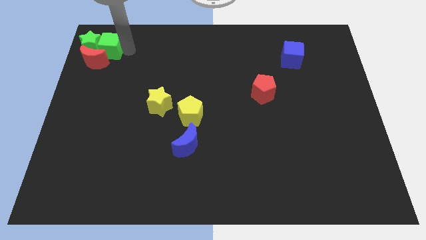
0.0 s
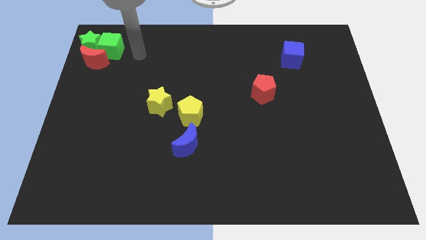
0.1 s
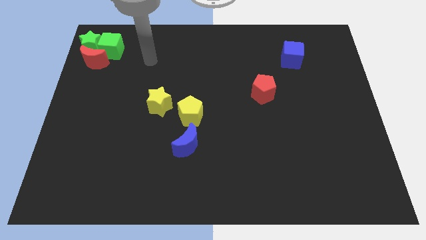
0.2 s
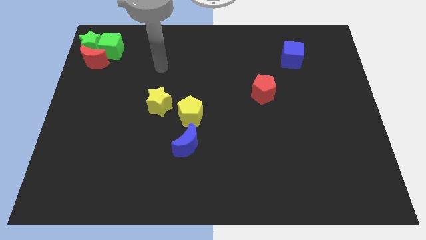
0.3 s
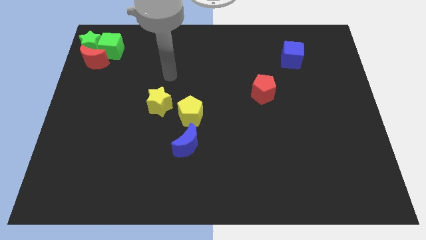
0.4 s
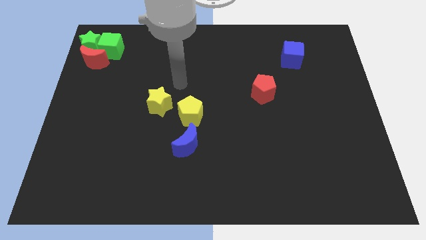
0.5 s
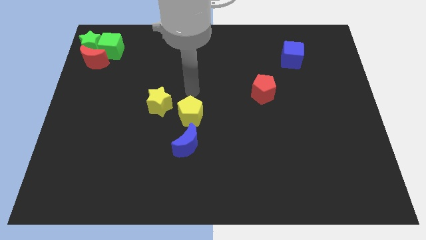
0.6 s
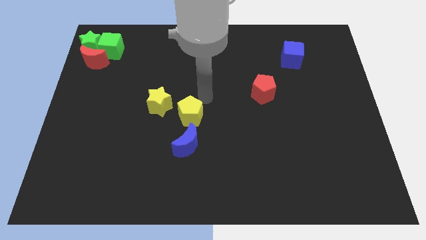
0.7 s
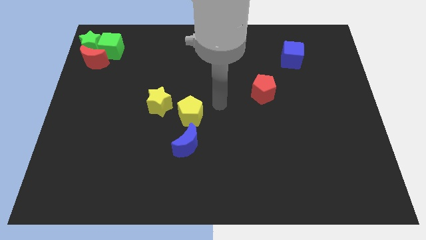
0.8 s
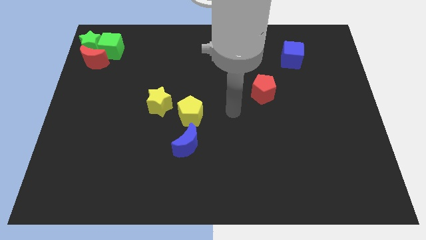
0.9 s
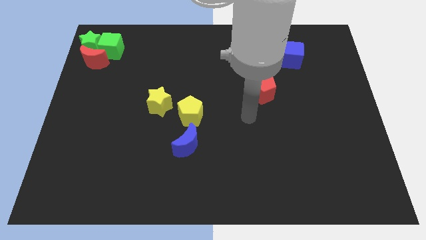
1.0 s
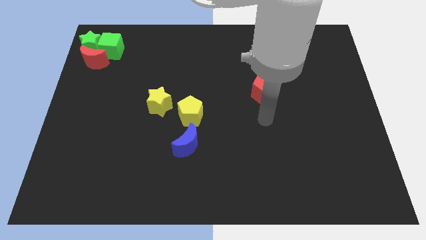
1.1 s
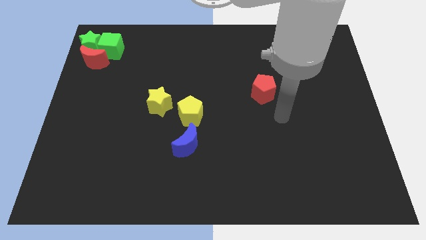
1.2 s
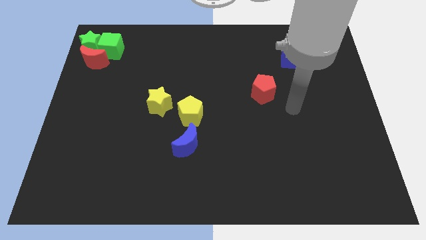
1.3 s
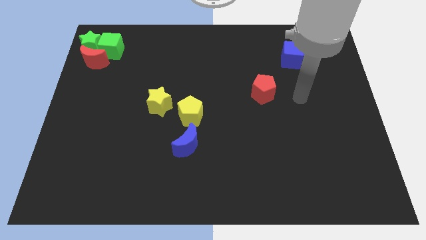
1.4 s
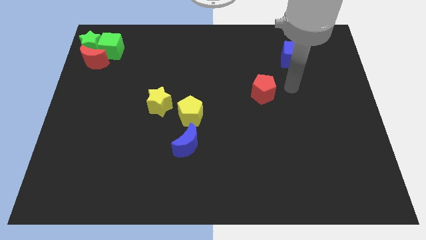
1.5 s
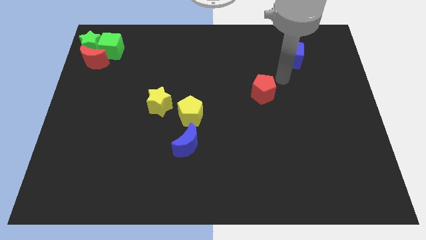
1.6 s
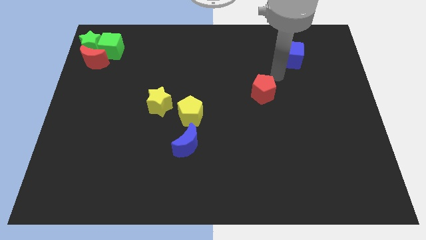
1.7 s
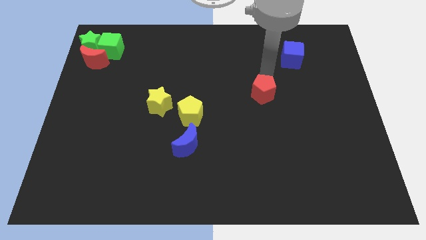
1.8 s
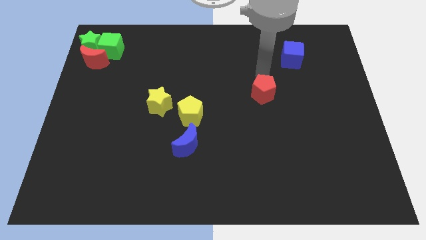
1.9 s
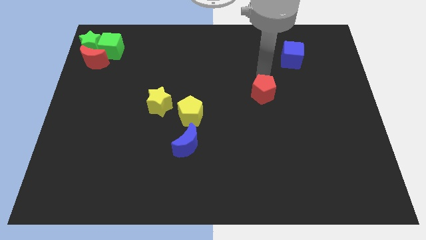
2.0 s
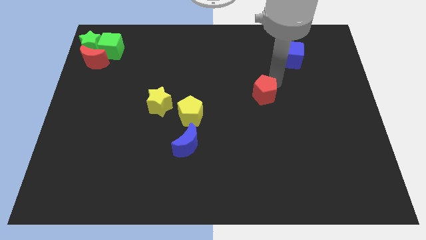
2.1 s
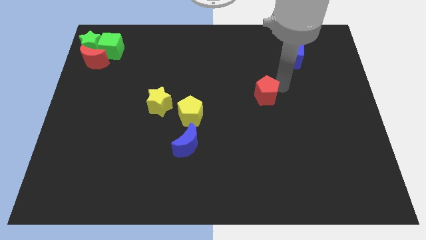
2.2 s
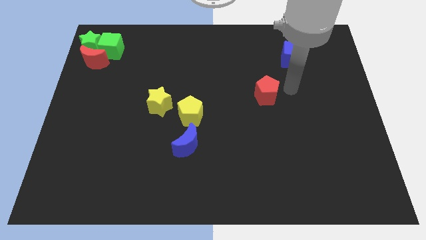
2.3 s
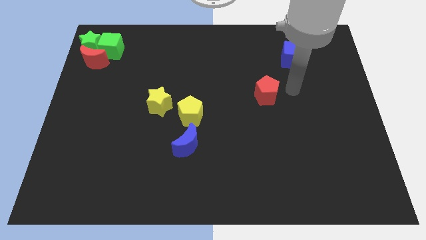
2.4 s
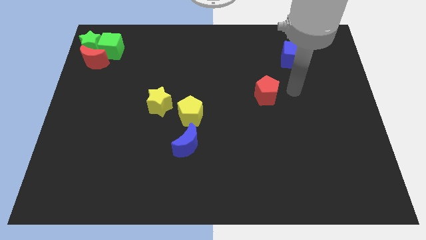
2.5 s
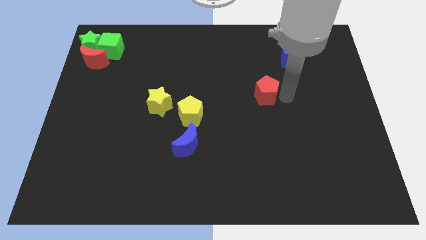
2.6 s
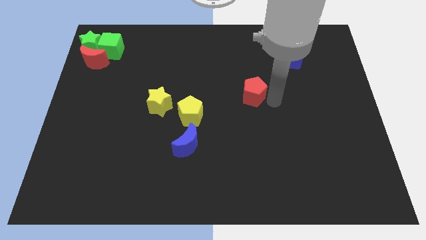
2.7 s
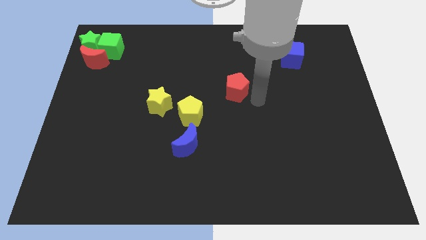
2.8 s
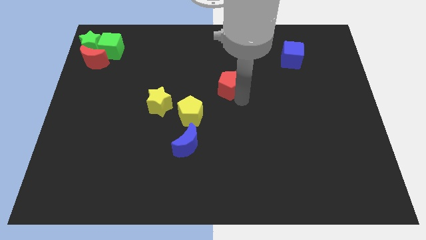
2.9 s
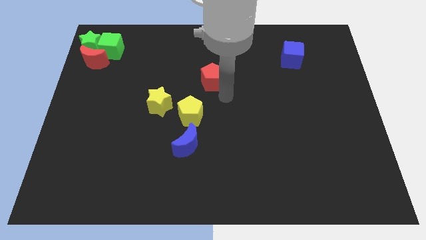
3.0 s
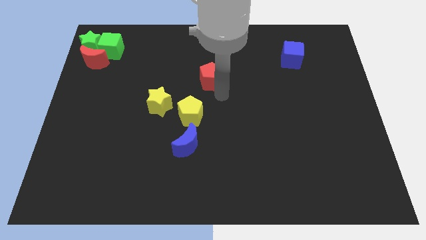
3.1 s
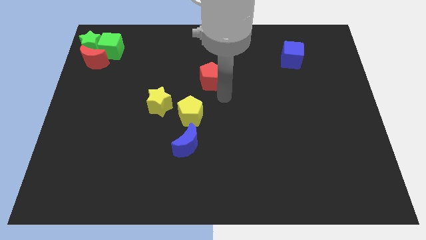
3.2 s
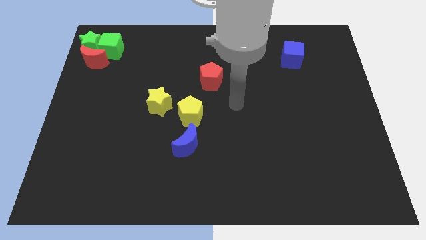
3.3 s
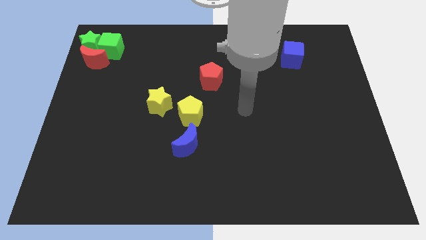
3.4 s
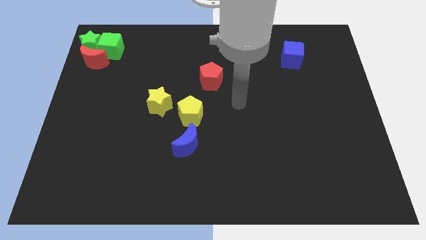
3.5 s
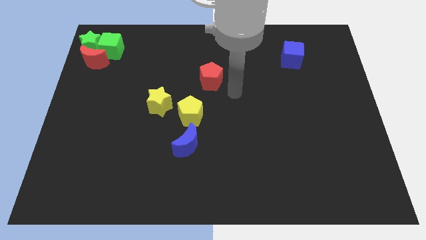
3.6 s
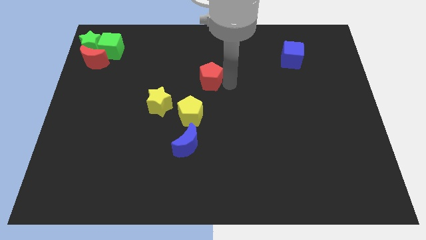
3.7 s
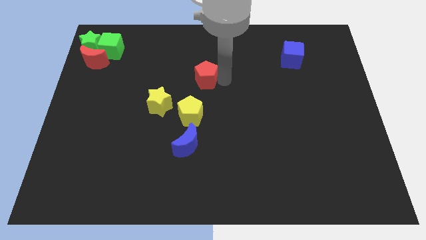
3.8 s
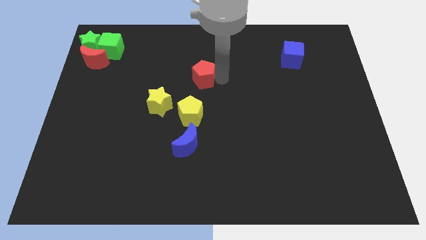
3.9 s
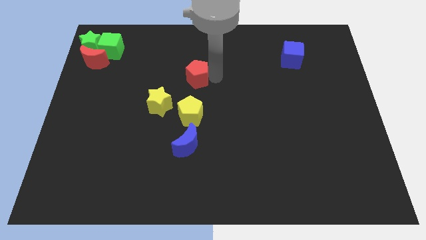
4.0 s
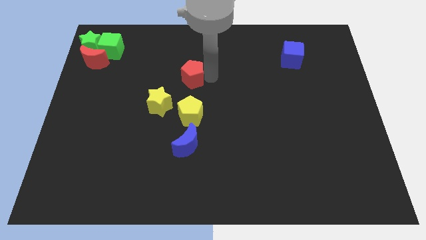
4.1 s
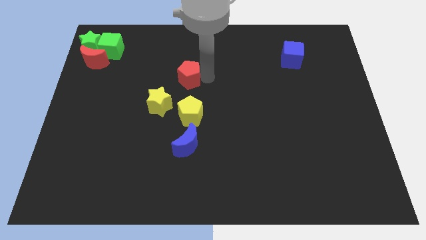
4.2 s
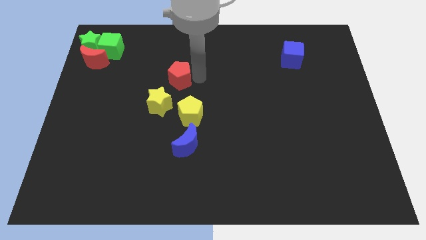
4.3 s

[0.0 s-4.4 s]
put the red pentagon vertically above the yellow pentagon

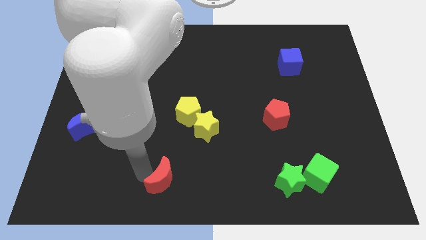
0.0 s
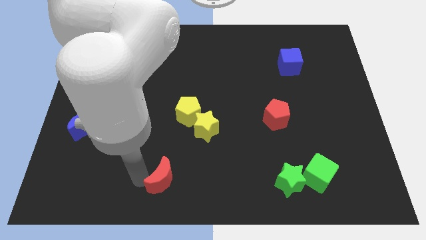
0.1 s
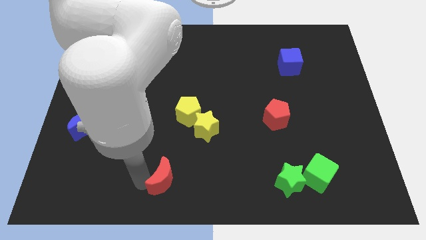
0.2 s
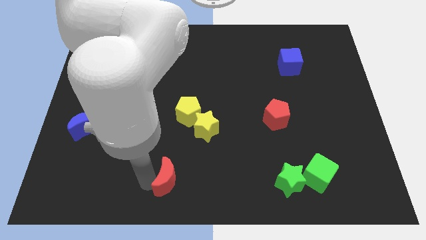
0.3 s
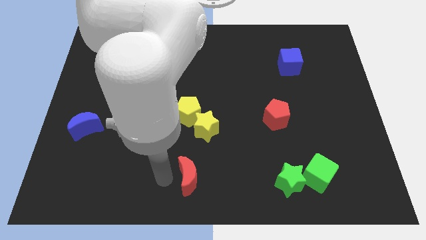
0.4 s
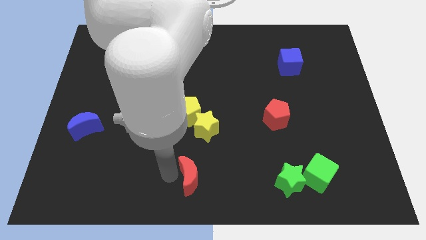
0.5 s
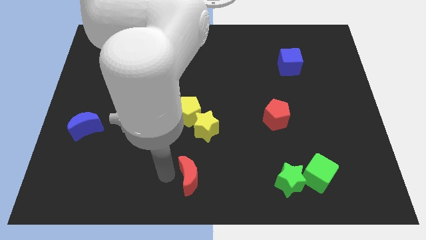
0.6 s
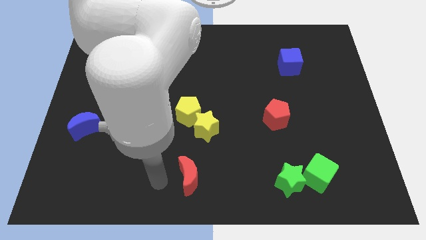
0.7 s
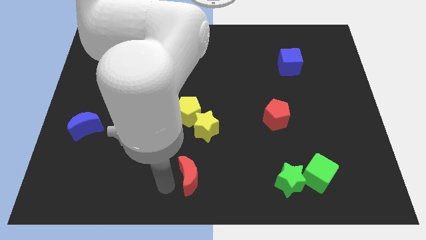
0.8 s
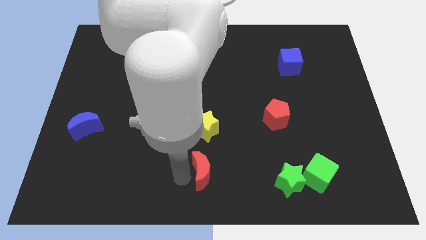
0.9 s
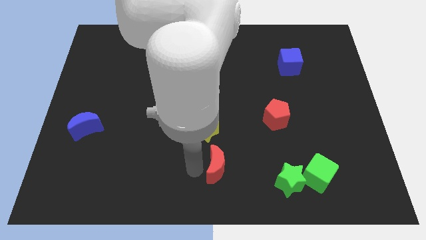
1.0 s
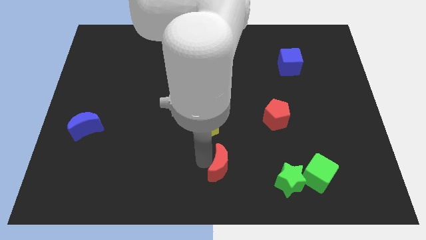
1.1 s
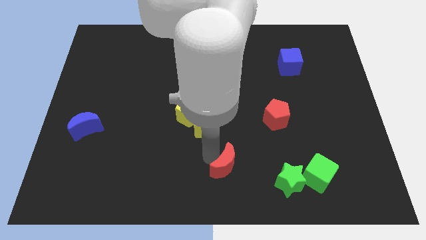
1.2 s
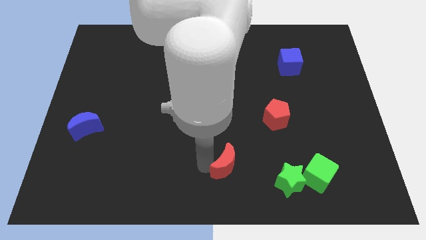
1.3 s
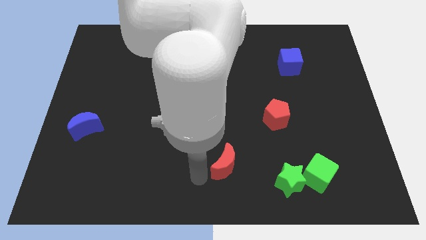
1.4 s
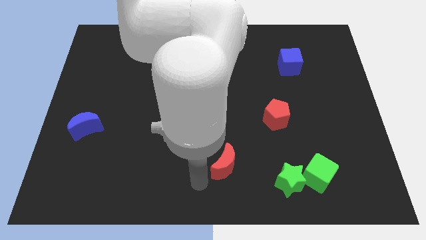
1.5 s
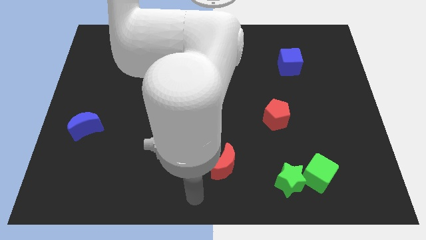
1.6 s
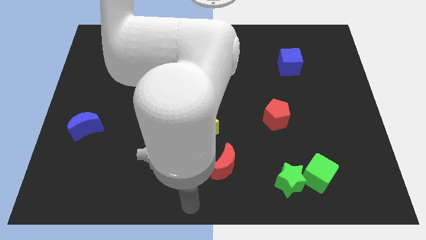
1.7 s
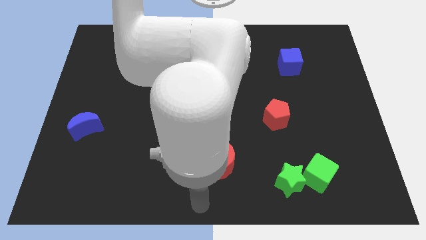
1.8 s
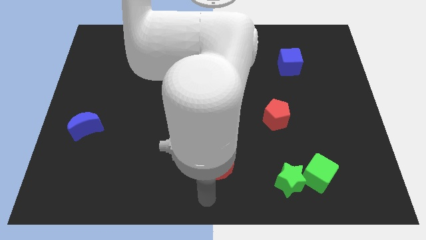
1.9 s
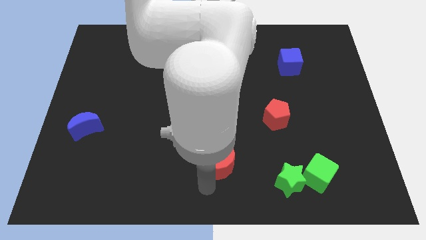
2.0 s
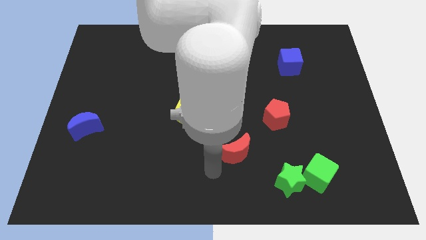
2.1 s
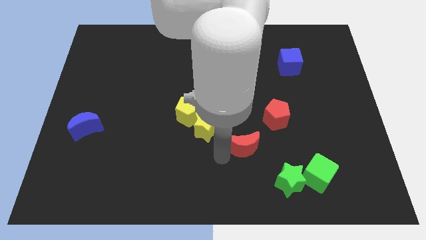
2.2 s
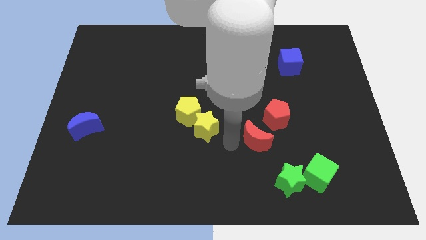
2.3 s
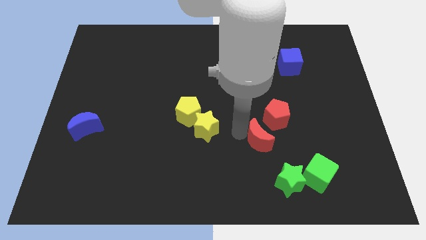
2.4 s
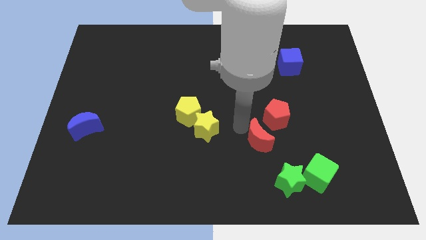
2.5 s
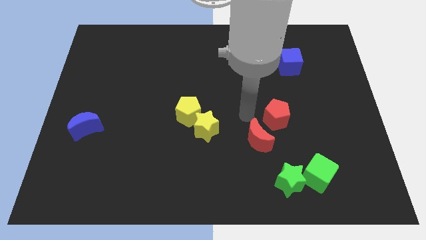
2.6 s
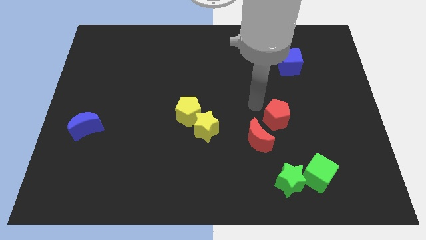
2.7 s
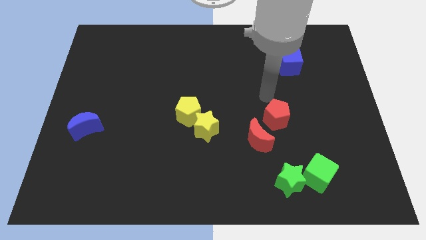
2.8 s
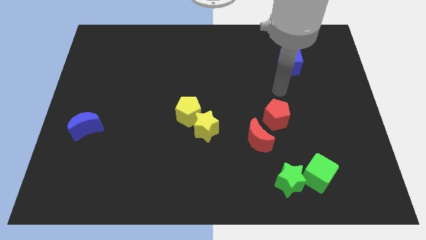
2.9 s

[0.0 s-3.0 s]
move the red moon close to the red pentagon

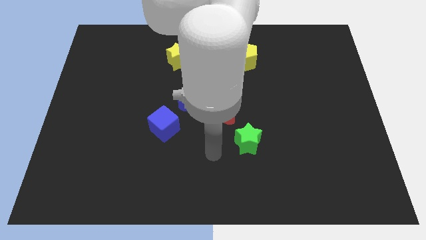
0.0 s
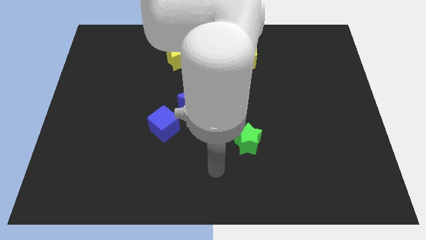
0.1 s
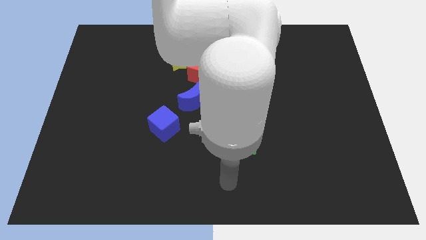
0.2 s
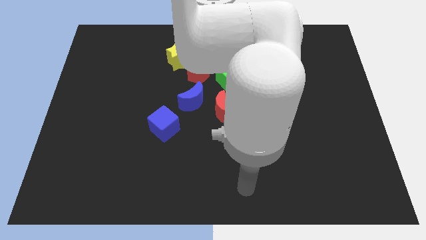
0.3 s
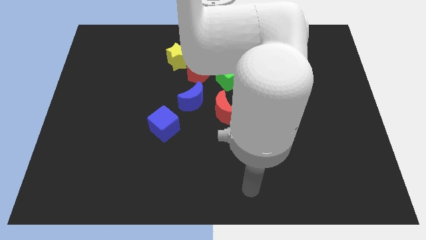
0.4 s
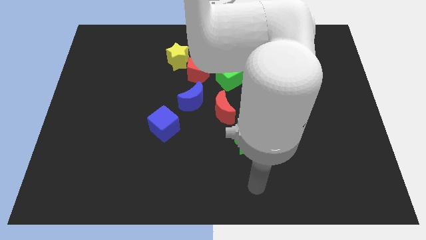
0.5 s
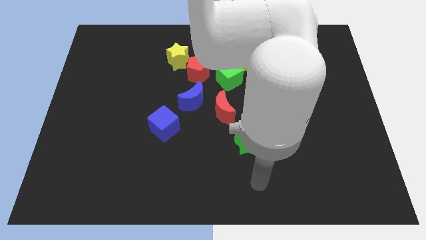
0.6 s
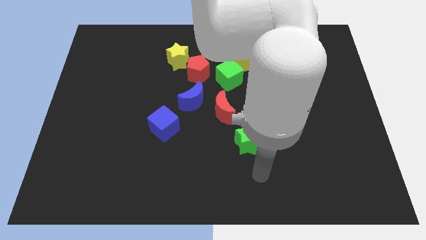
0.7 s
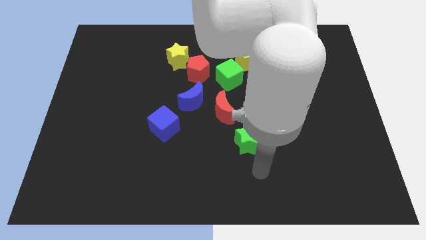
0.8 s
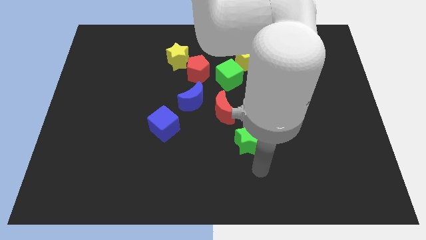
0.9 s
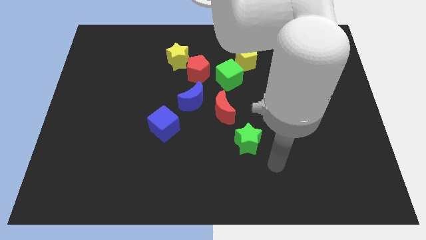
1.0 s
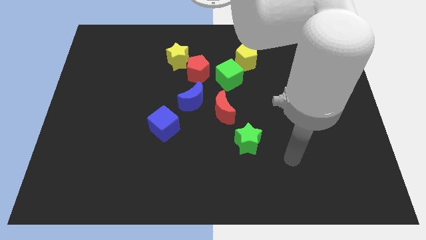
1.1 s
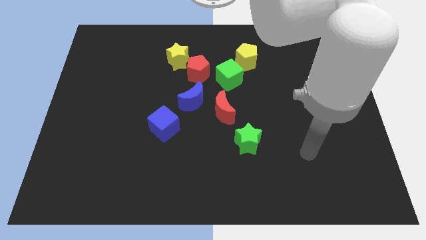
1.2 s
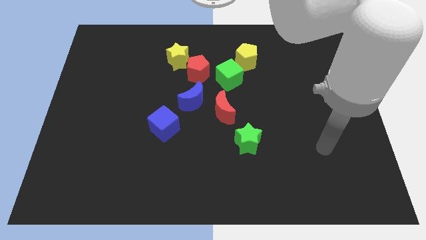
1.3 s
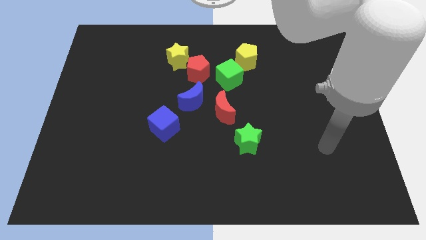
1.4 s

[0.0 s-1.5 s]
move your arm towards the right center of the board

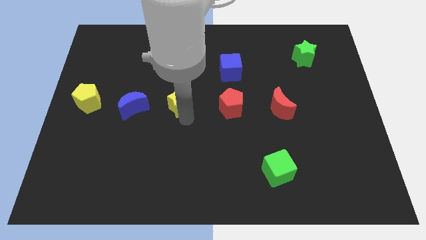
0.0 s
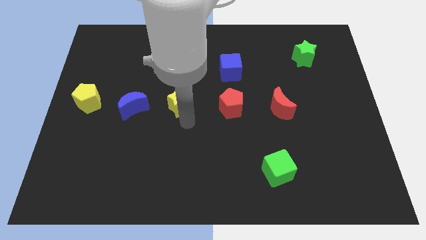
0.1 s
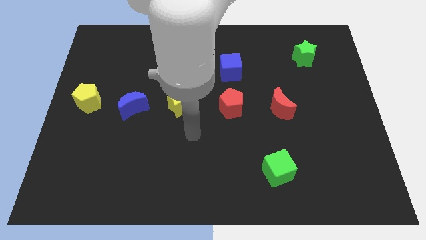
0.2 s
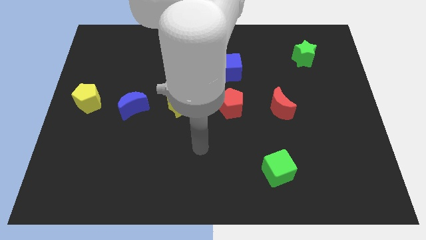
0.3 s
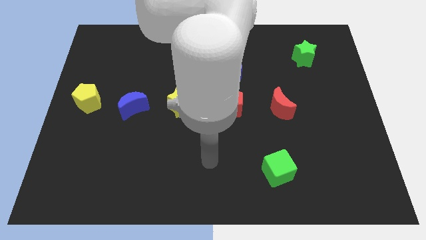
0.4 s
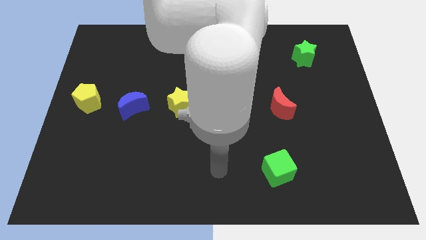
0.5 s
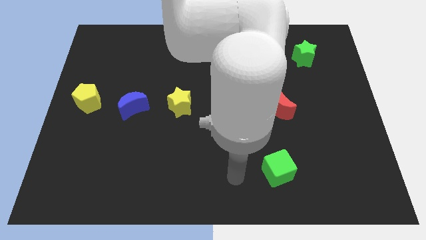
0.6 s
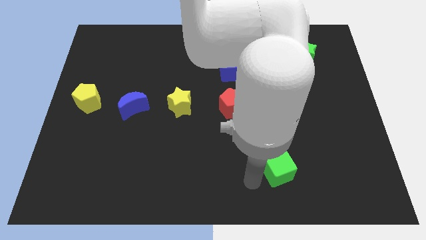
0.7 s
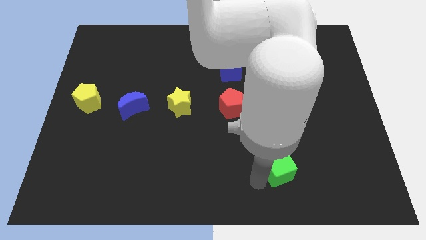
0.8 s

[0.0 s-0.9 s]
move your arm away from the yellow star
